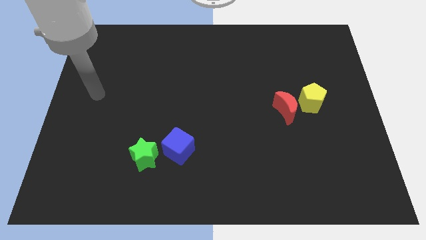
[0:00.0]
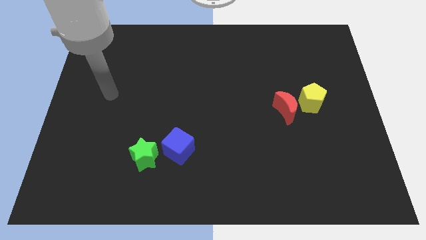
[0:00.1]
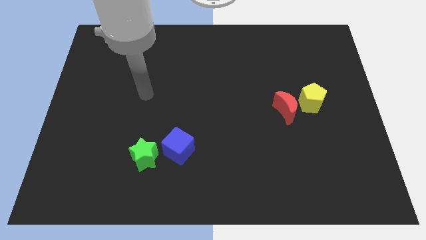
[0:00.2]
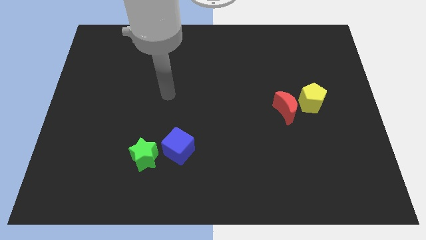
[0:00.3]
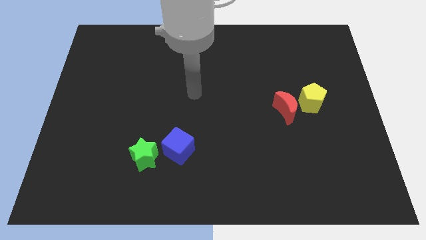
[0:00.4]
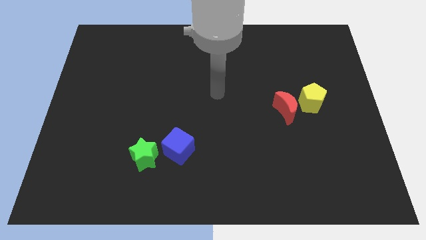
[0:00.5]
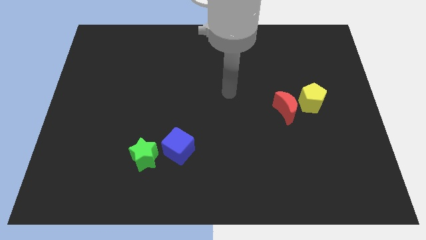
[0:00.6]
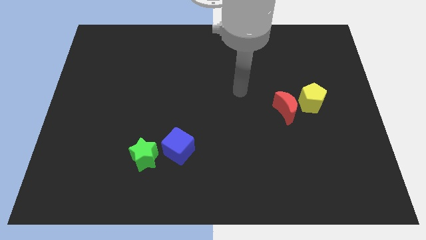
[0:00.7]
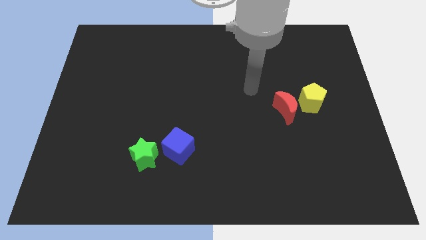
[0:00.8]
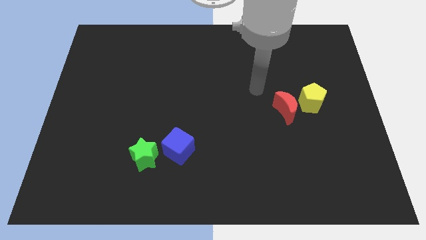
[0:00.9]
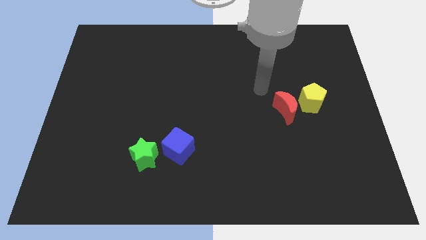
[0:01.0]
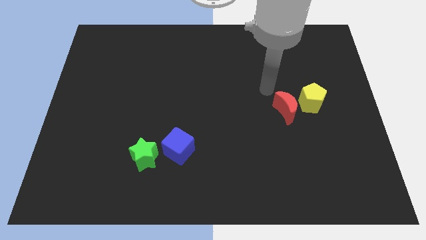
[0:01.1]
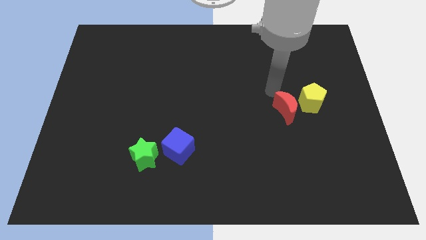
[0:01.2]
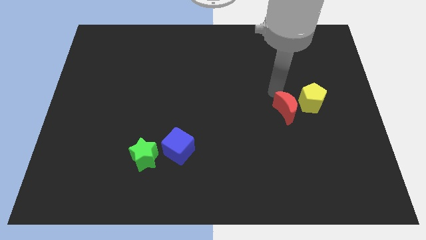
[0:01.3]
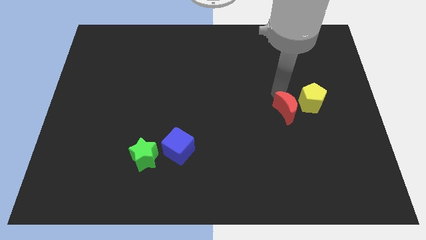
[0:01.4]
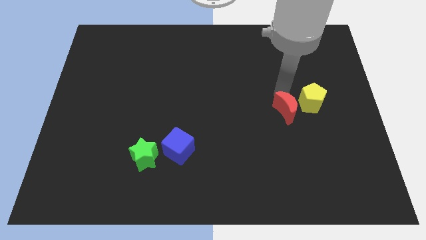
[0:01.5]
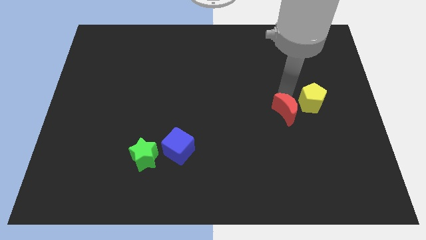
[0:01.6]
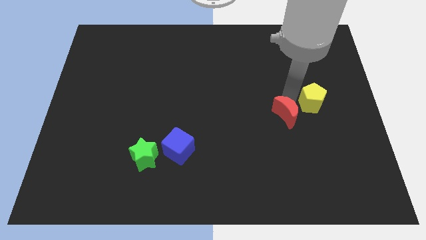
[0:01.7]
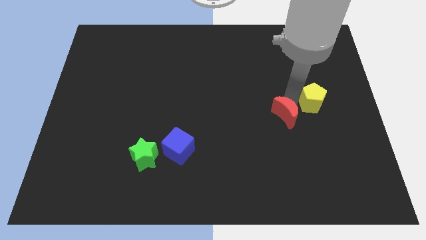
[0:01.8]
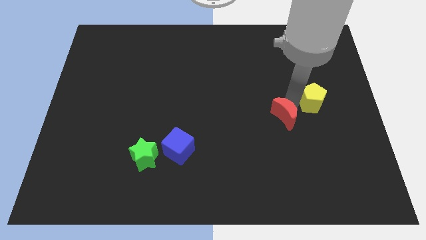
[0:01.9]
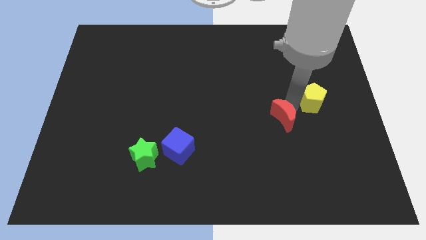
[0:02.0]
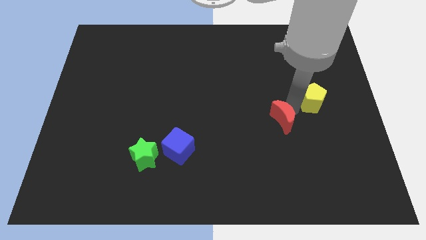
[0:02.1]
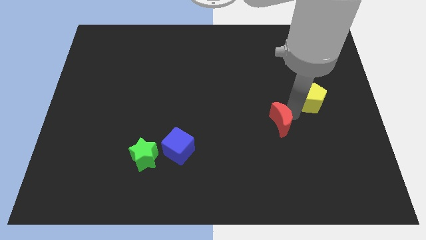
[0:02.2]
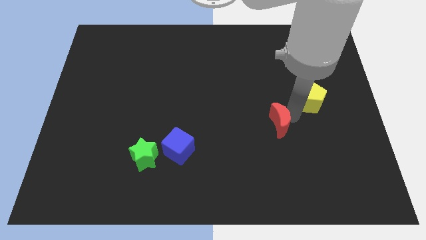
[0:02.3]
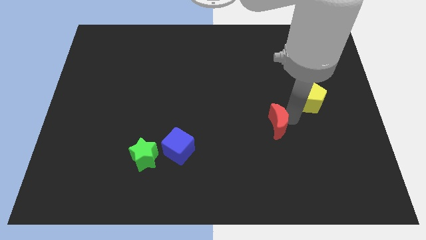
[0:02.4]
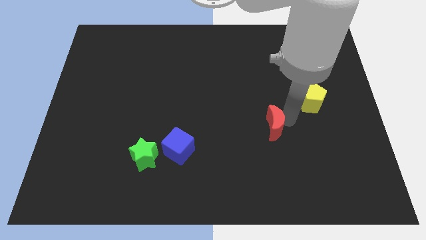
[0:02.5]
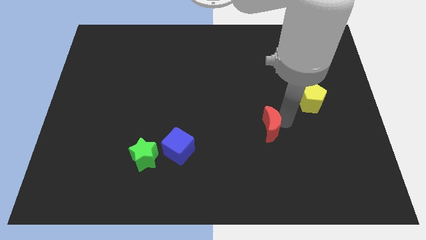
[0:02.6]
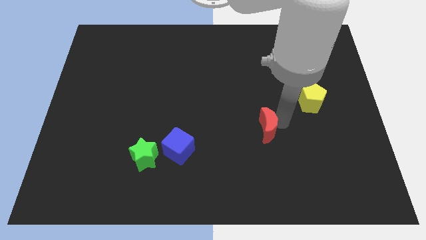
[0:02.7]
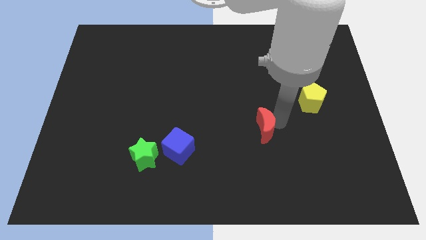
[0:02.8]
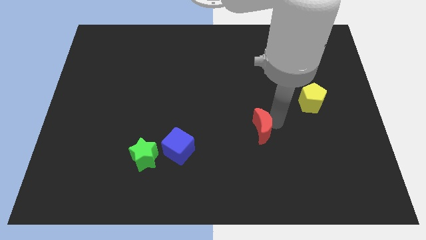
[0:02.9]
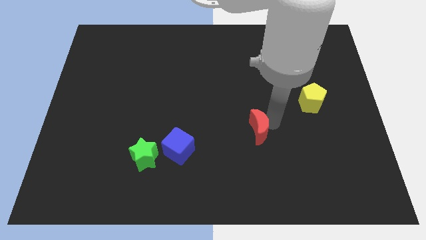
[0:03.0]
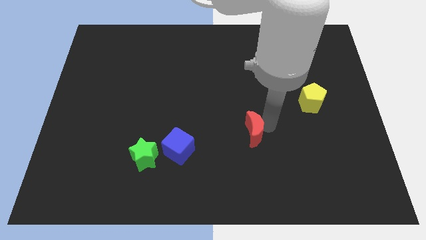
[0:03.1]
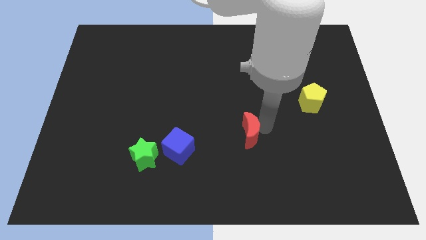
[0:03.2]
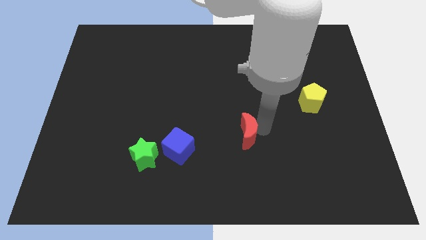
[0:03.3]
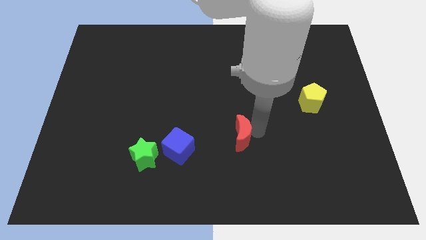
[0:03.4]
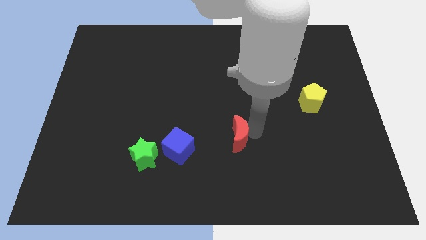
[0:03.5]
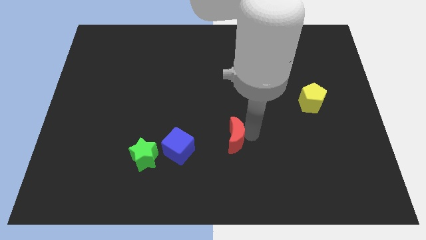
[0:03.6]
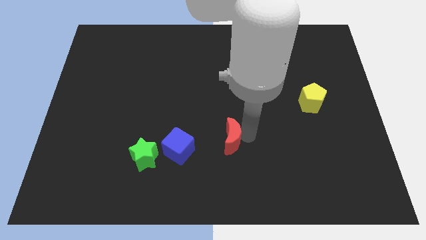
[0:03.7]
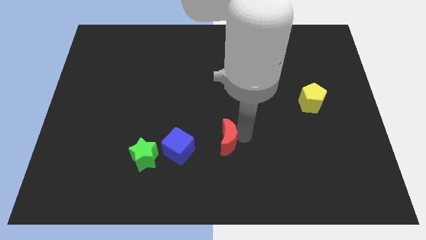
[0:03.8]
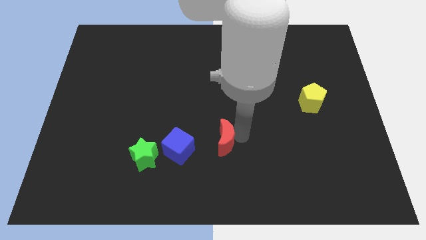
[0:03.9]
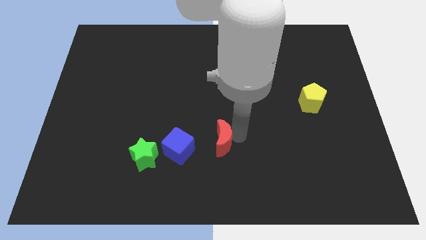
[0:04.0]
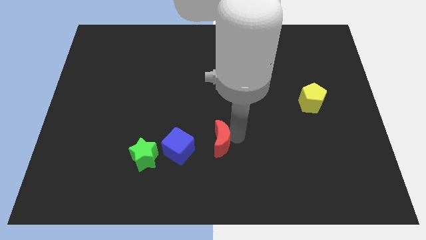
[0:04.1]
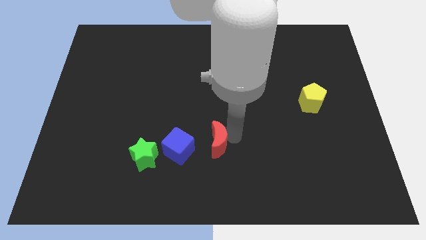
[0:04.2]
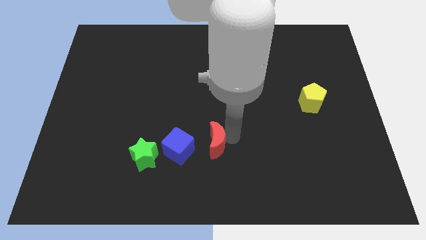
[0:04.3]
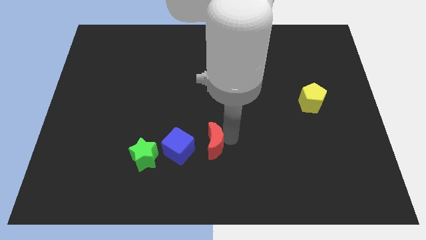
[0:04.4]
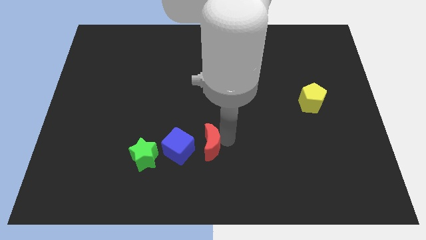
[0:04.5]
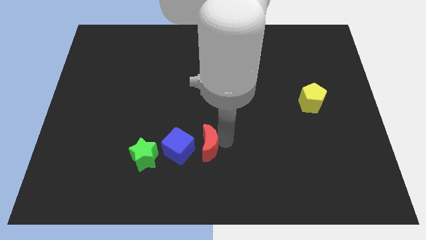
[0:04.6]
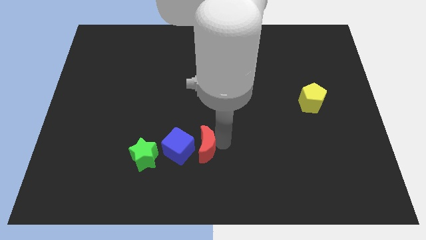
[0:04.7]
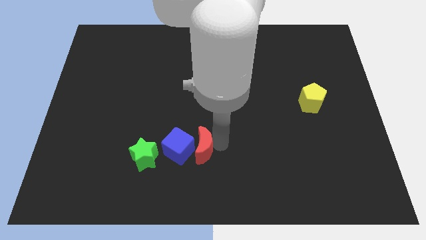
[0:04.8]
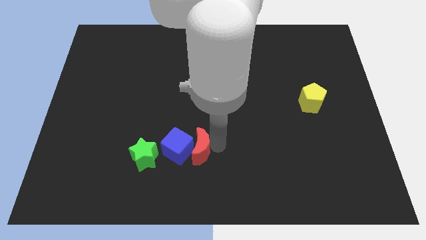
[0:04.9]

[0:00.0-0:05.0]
push the red moon next to the blue cube

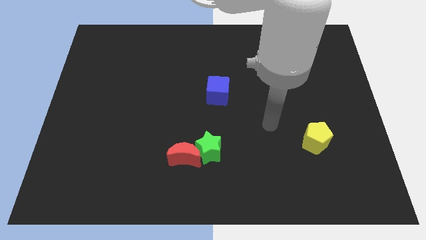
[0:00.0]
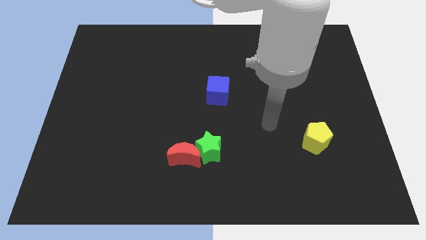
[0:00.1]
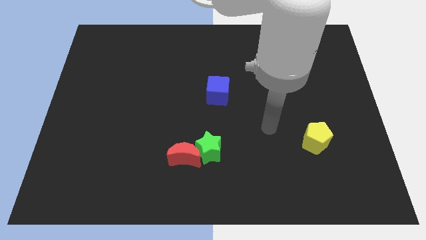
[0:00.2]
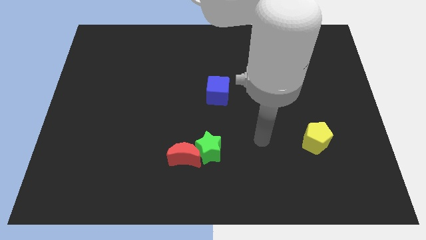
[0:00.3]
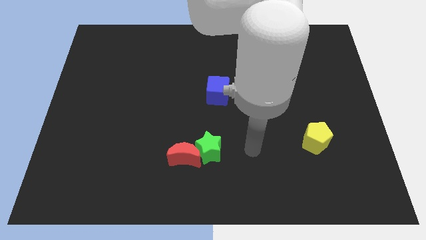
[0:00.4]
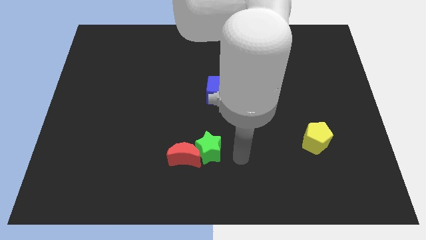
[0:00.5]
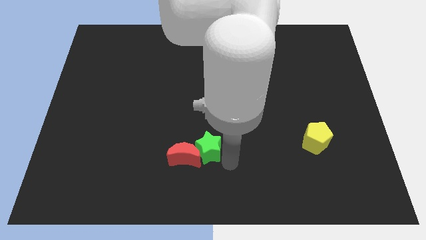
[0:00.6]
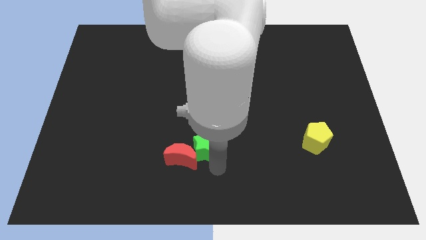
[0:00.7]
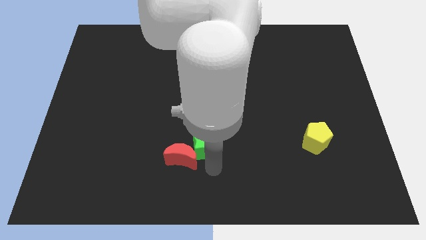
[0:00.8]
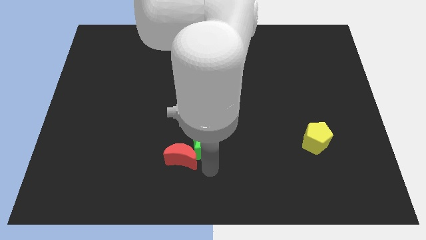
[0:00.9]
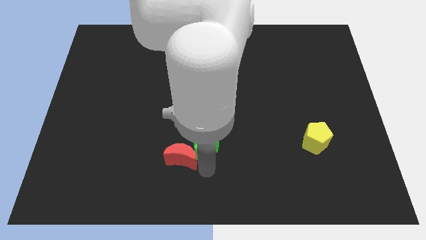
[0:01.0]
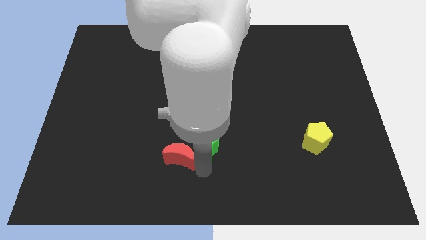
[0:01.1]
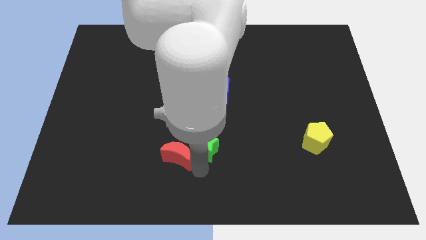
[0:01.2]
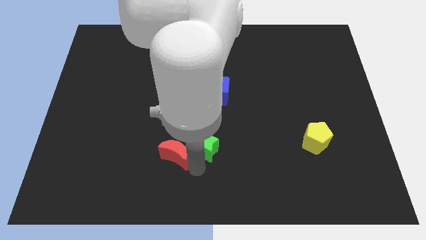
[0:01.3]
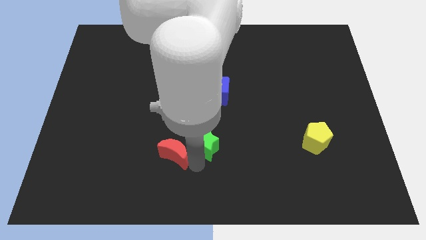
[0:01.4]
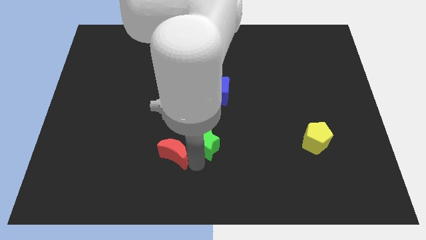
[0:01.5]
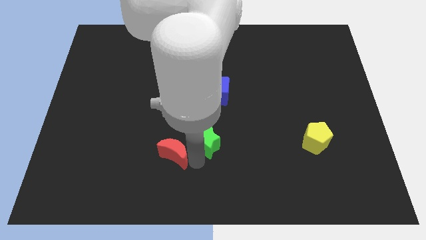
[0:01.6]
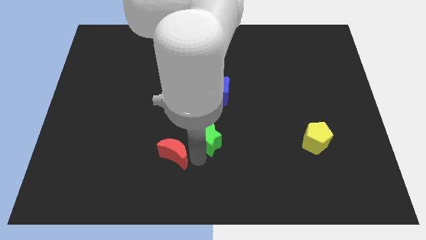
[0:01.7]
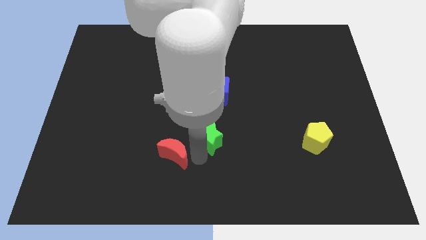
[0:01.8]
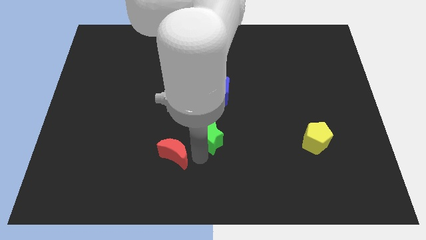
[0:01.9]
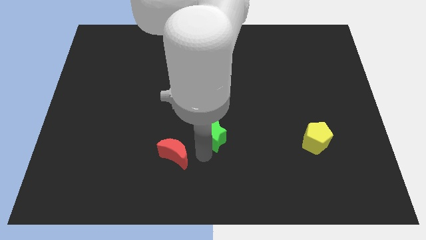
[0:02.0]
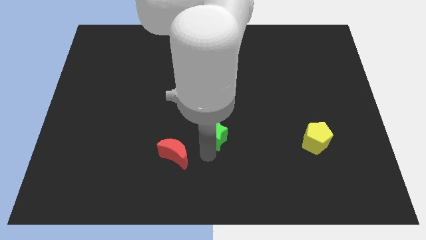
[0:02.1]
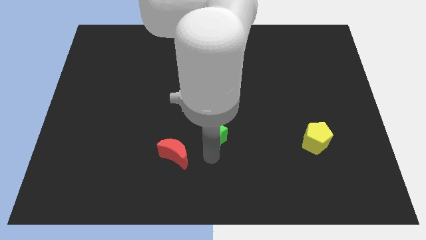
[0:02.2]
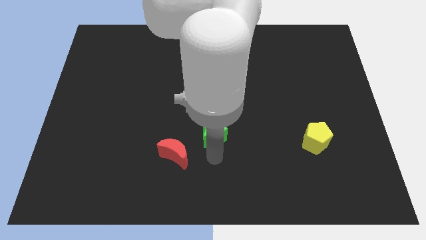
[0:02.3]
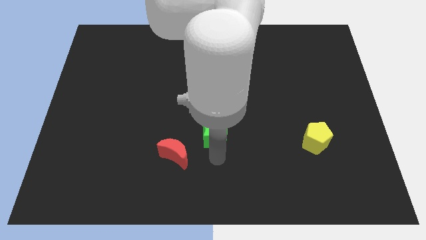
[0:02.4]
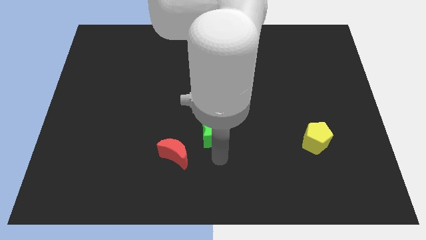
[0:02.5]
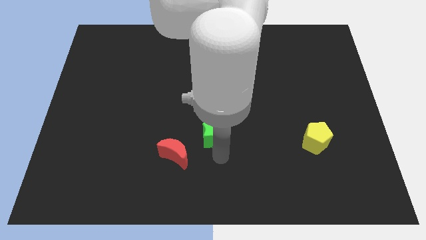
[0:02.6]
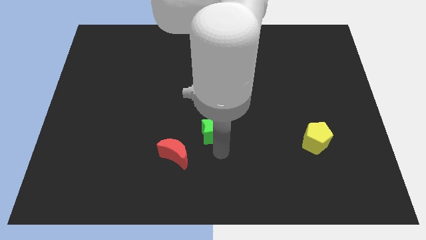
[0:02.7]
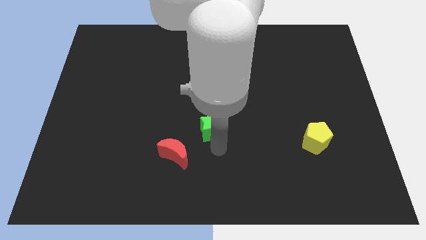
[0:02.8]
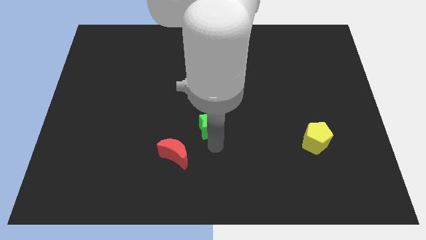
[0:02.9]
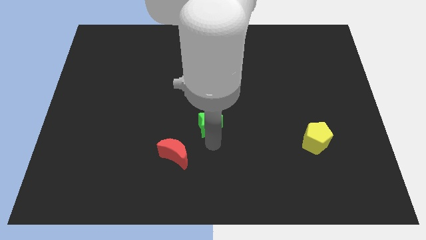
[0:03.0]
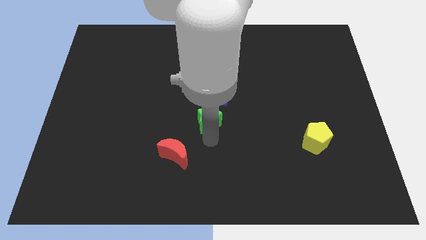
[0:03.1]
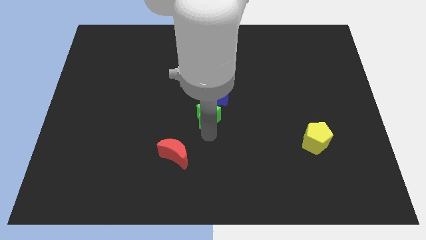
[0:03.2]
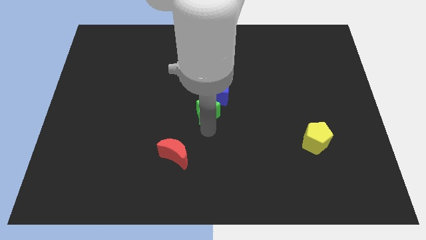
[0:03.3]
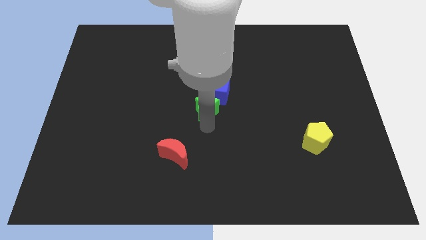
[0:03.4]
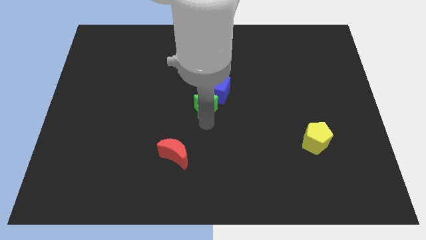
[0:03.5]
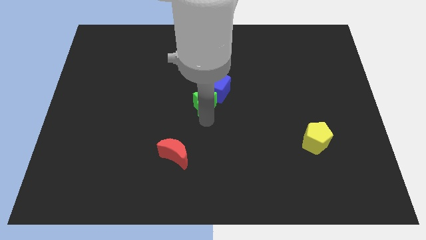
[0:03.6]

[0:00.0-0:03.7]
put the green star next to the blue cube
